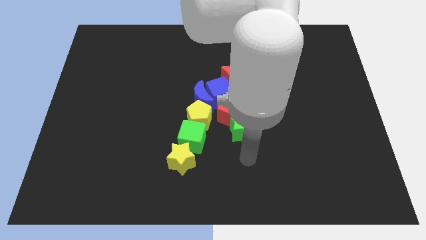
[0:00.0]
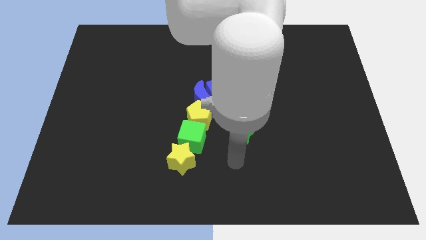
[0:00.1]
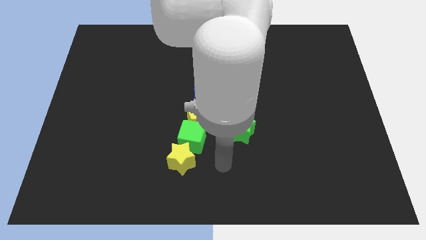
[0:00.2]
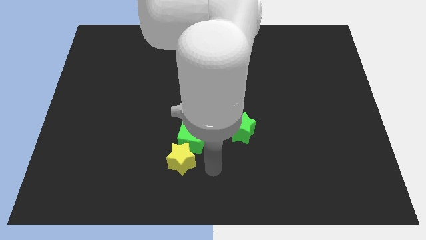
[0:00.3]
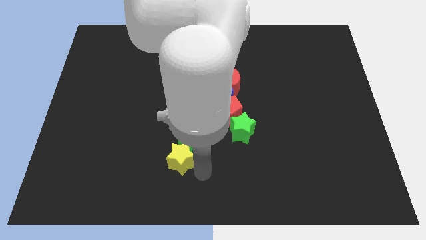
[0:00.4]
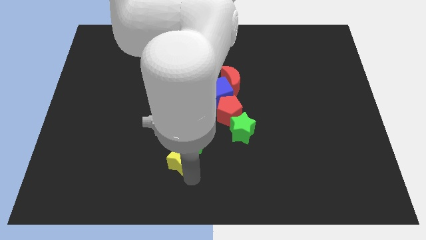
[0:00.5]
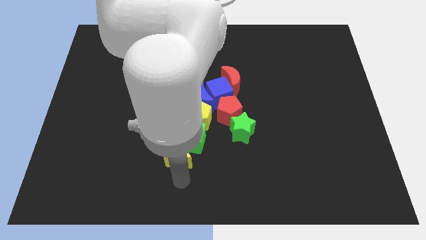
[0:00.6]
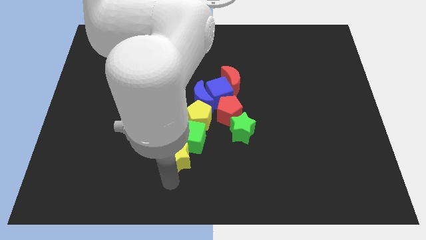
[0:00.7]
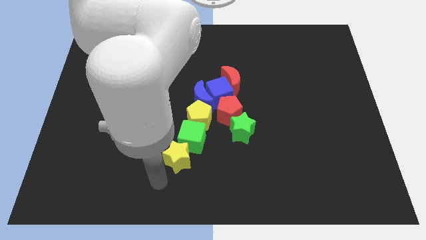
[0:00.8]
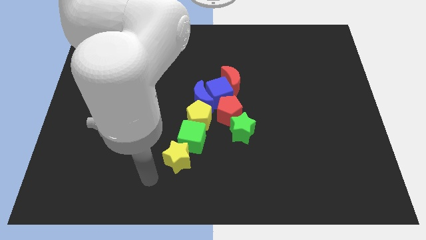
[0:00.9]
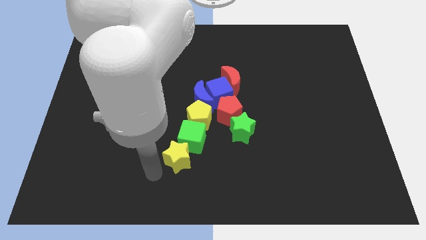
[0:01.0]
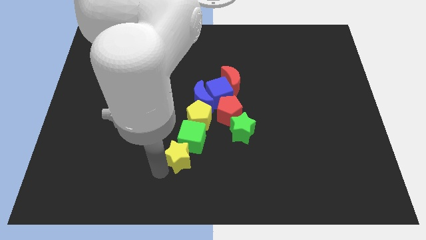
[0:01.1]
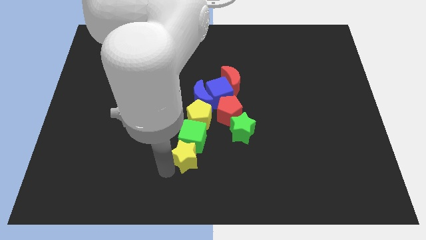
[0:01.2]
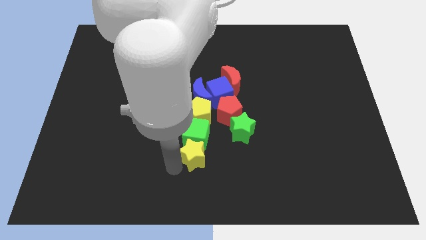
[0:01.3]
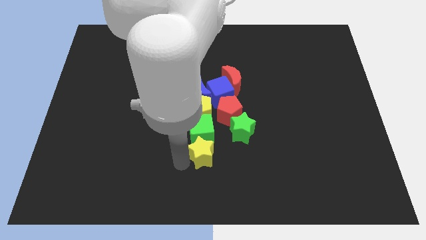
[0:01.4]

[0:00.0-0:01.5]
place the yellow star at the bottom side of the green cube

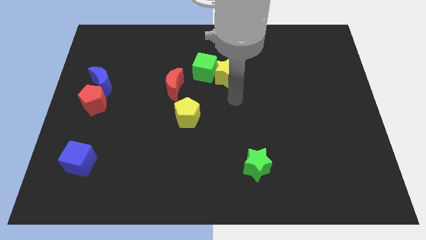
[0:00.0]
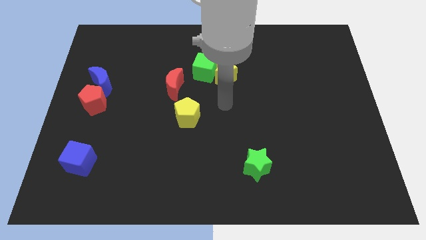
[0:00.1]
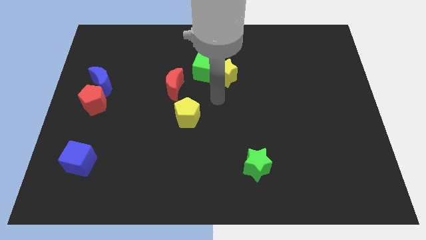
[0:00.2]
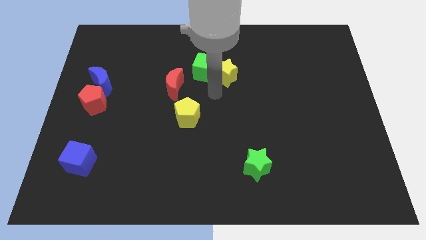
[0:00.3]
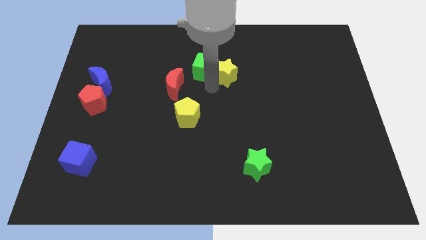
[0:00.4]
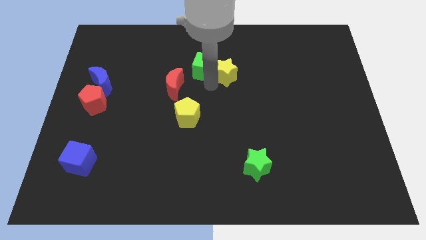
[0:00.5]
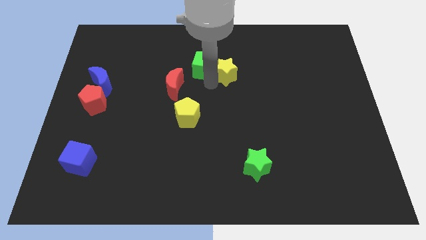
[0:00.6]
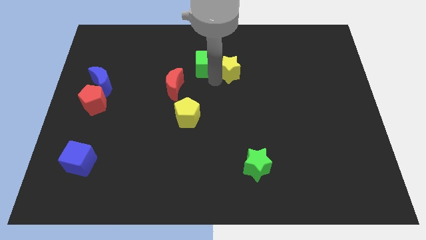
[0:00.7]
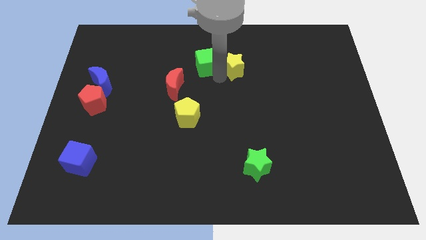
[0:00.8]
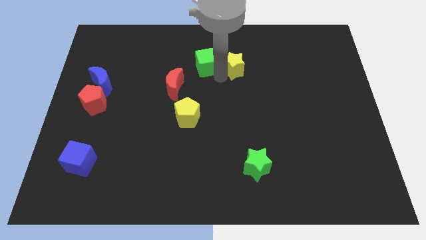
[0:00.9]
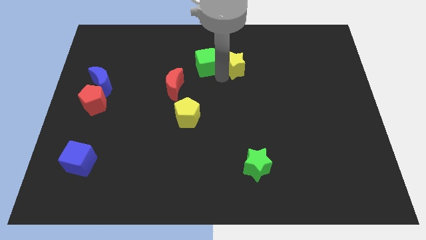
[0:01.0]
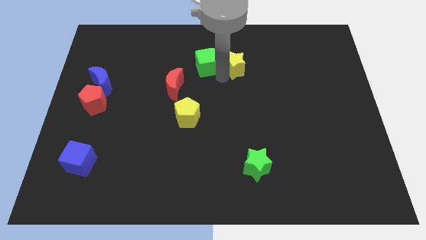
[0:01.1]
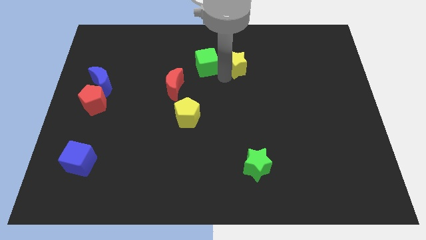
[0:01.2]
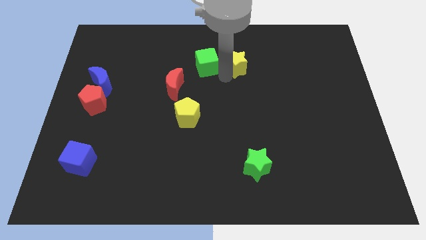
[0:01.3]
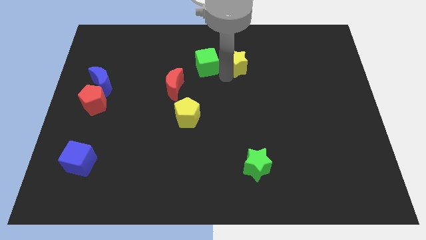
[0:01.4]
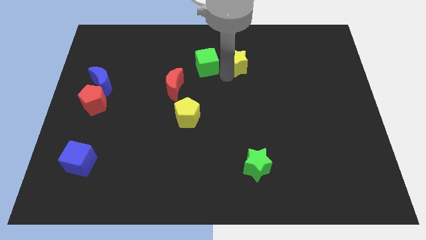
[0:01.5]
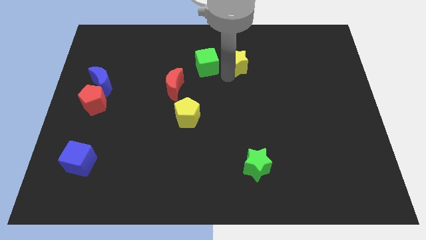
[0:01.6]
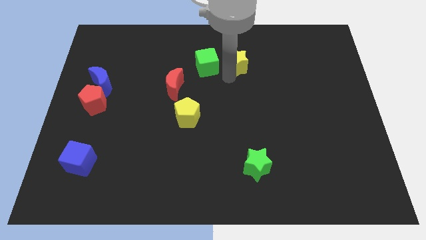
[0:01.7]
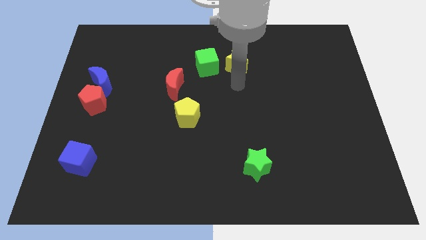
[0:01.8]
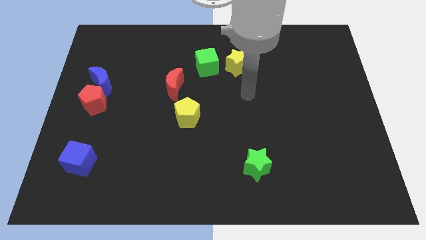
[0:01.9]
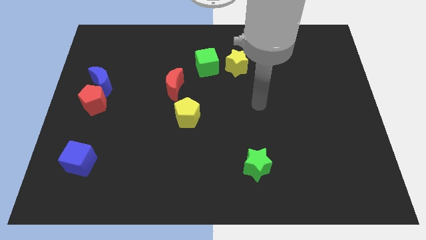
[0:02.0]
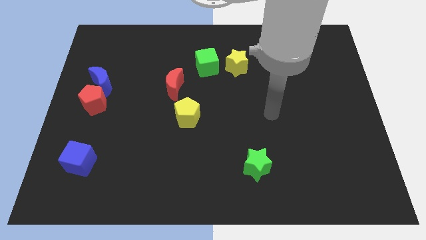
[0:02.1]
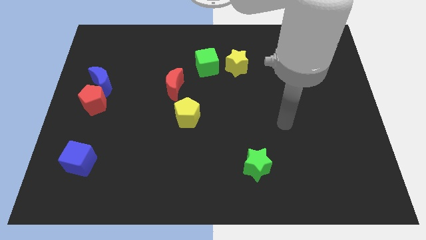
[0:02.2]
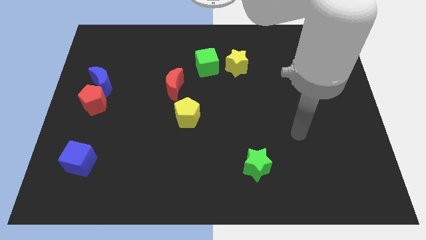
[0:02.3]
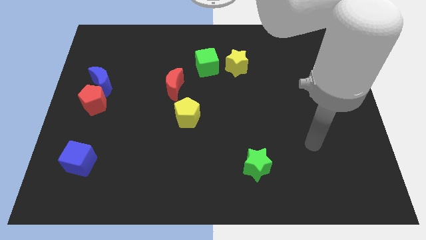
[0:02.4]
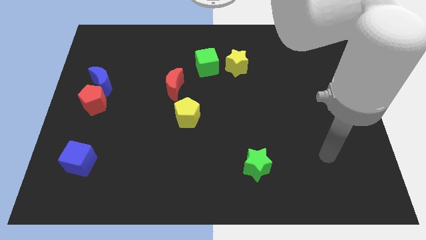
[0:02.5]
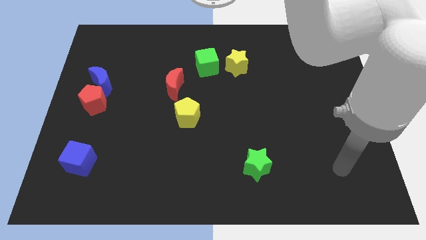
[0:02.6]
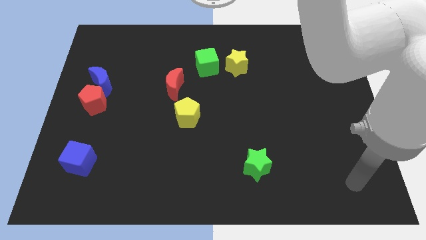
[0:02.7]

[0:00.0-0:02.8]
separate the green cube and yellow star from each other

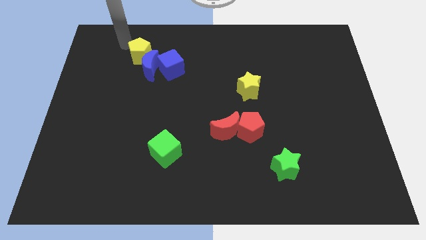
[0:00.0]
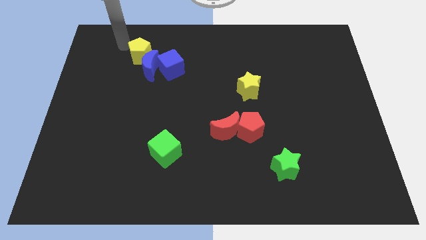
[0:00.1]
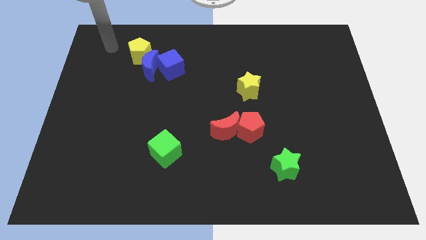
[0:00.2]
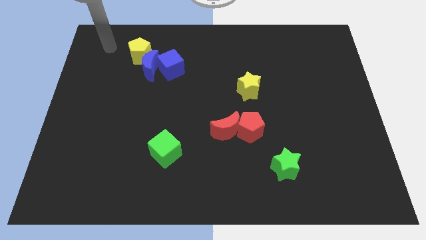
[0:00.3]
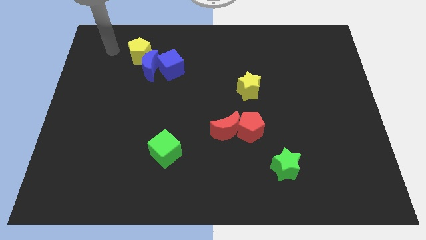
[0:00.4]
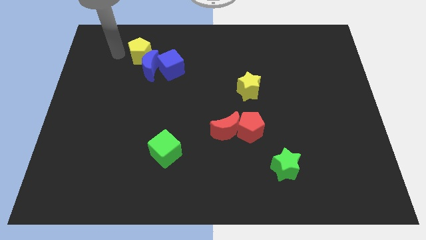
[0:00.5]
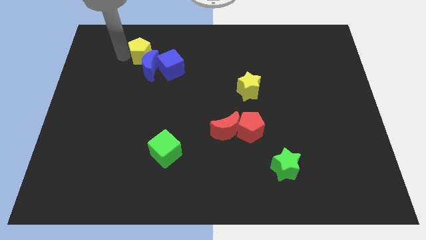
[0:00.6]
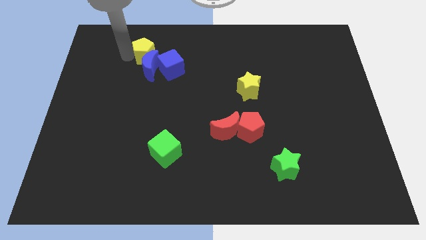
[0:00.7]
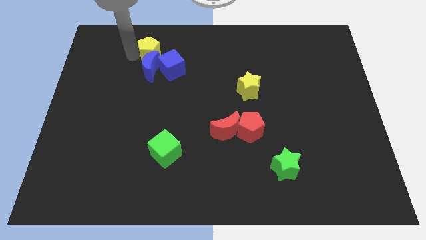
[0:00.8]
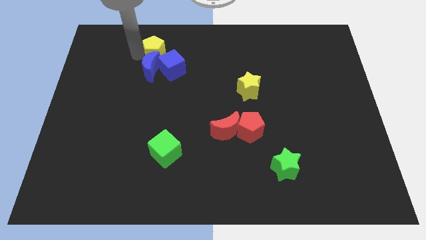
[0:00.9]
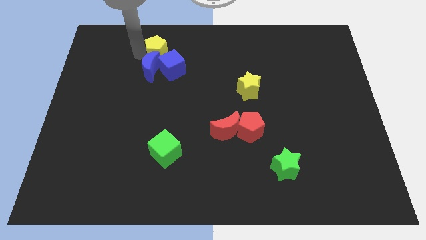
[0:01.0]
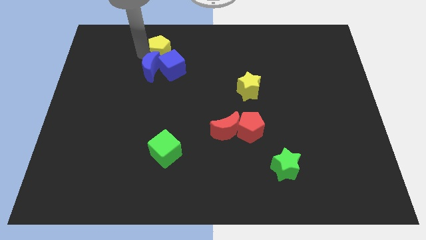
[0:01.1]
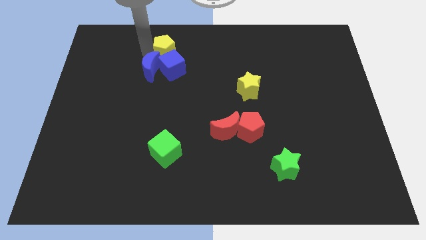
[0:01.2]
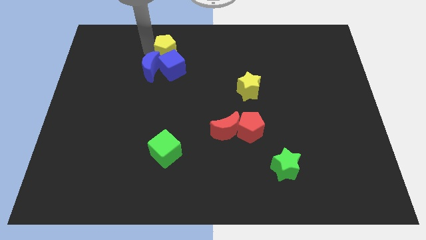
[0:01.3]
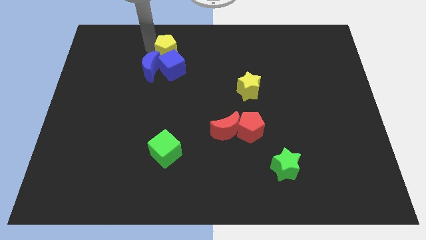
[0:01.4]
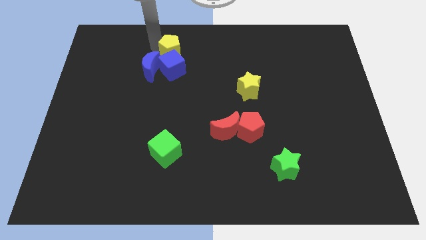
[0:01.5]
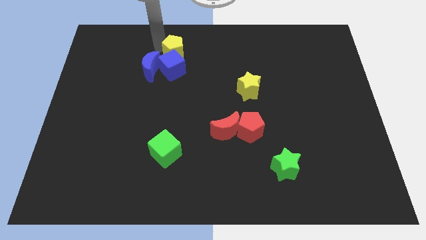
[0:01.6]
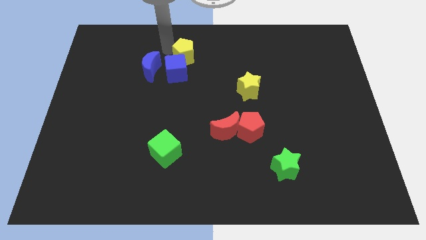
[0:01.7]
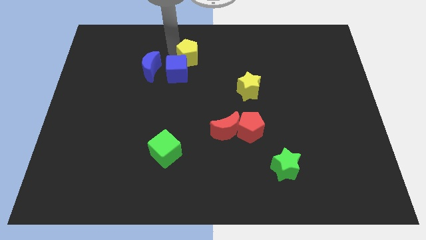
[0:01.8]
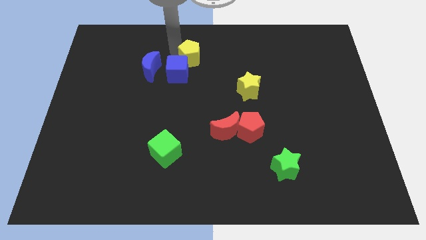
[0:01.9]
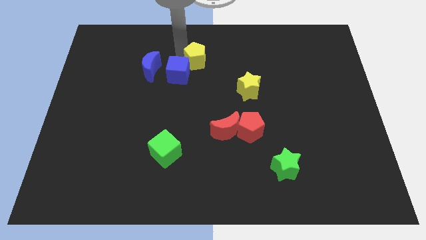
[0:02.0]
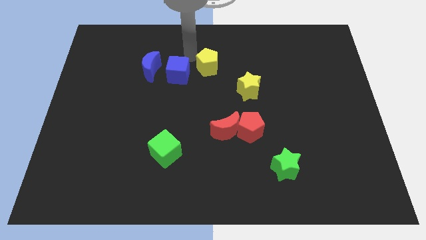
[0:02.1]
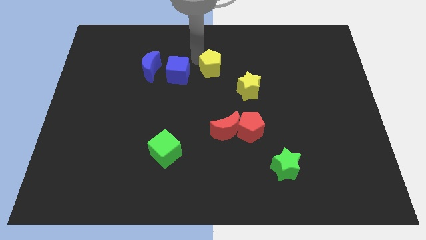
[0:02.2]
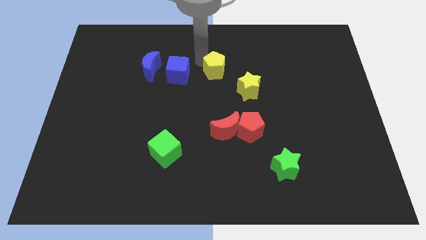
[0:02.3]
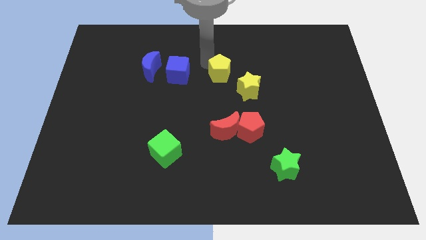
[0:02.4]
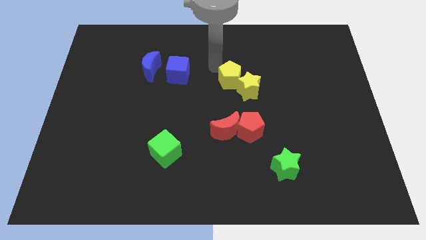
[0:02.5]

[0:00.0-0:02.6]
move the yellow pentagon diagonally left to the yellow star

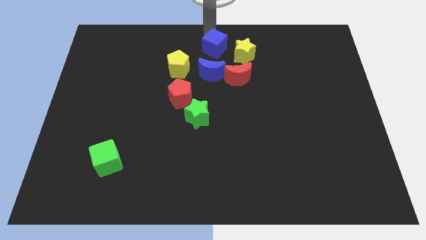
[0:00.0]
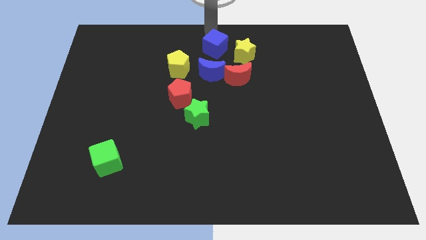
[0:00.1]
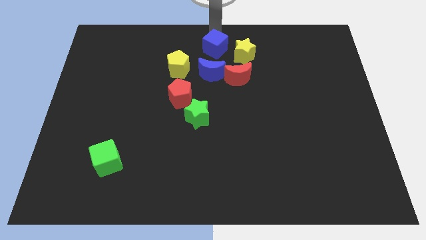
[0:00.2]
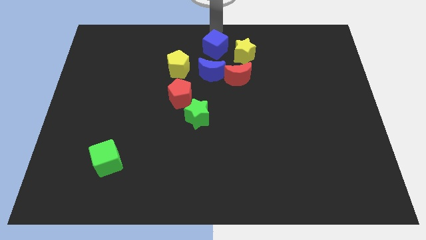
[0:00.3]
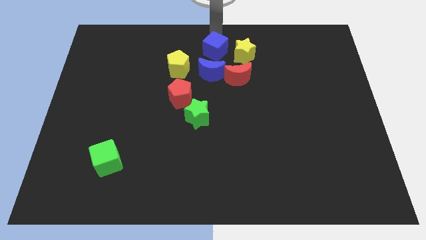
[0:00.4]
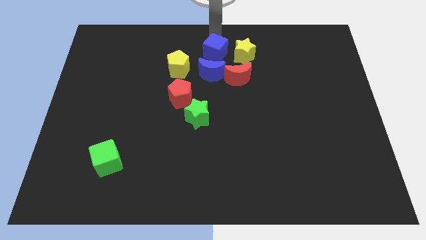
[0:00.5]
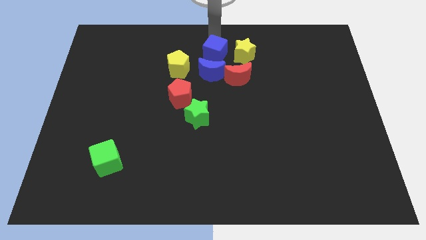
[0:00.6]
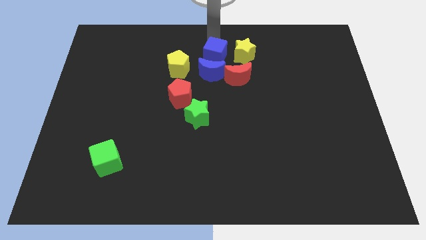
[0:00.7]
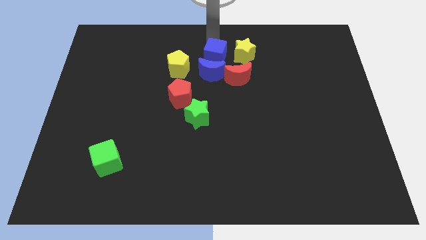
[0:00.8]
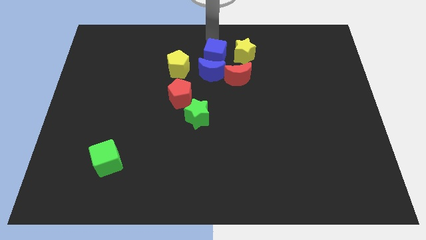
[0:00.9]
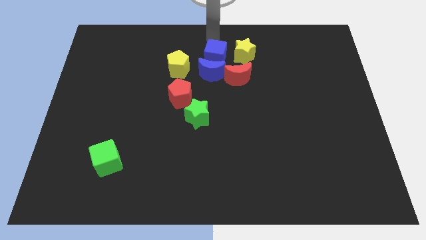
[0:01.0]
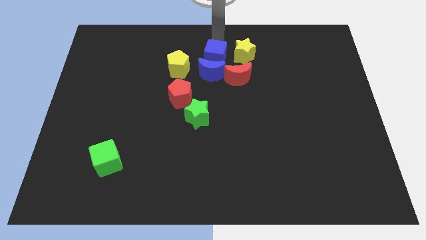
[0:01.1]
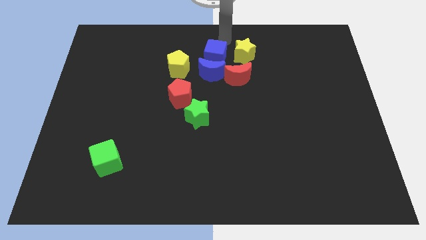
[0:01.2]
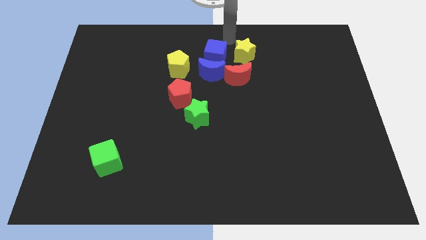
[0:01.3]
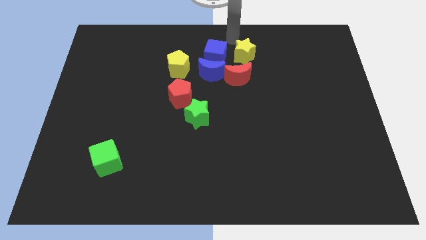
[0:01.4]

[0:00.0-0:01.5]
drag the blue cube slightly downwards

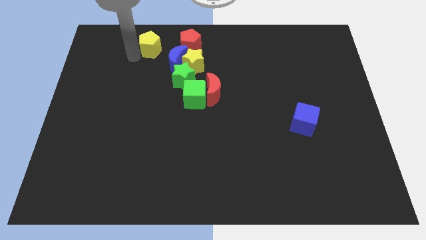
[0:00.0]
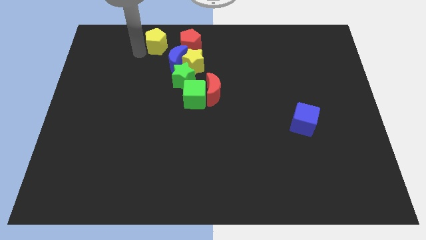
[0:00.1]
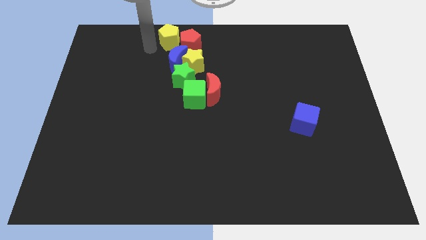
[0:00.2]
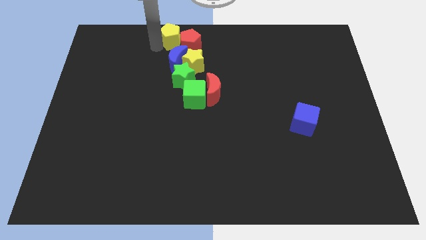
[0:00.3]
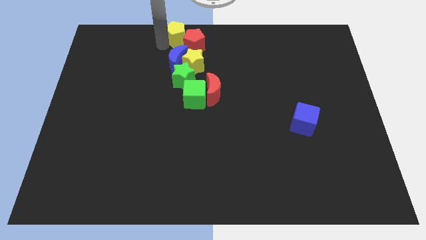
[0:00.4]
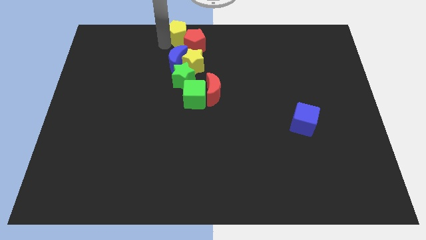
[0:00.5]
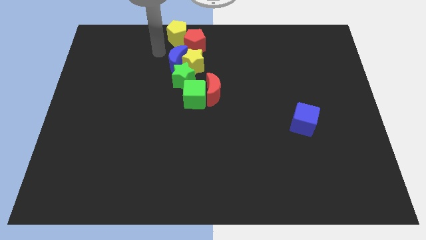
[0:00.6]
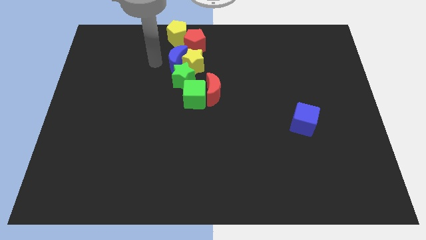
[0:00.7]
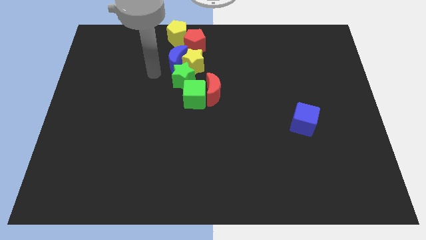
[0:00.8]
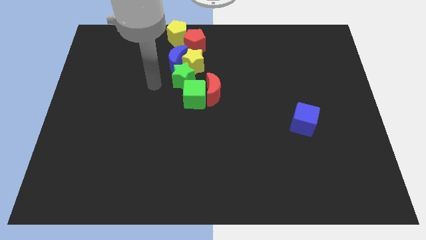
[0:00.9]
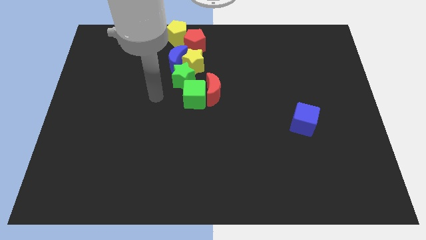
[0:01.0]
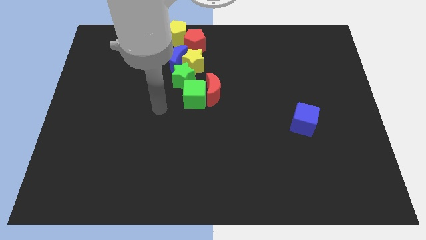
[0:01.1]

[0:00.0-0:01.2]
place the yellow pentagon into the red pentagon
